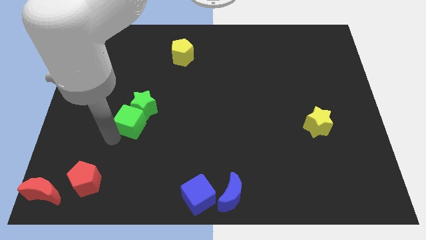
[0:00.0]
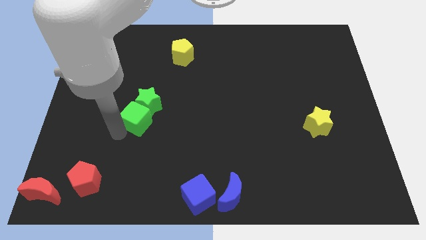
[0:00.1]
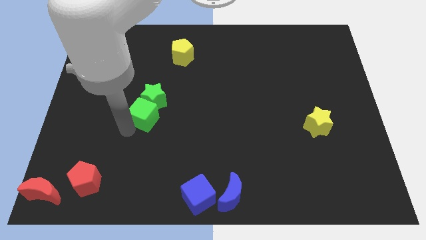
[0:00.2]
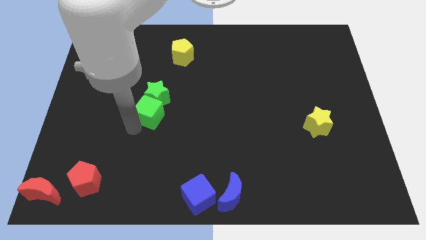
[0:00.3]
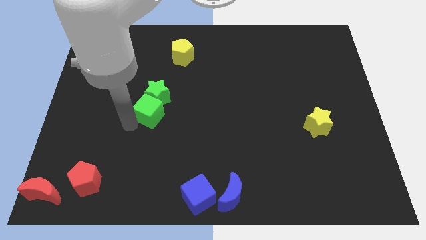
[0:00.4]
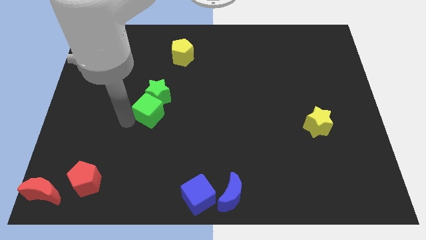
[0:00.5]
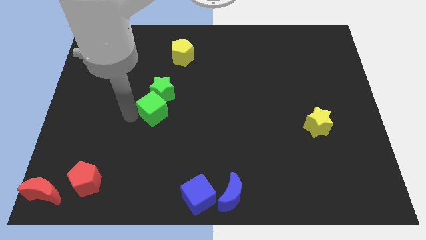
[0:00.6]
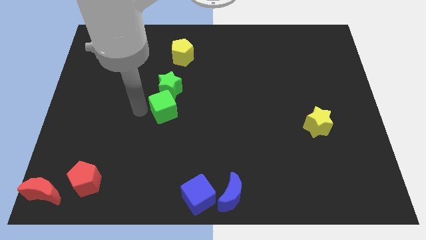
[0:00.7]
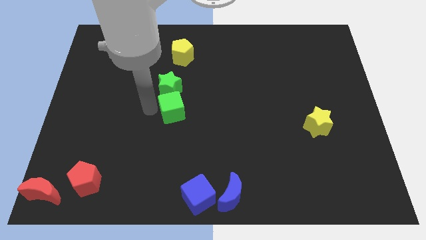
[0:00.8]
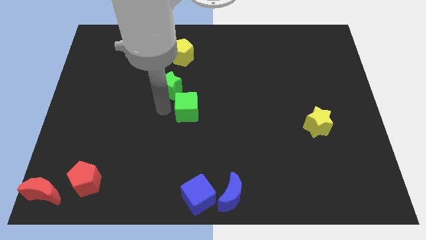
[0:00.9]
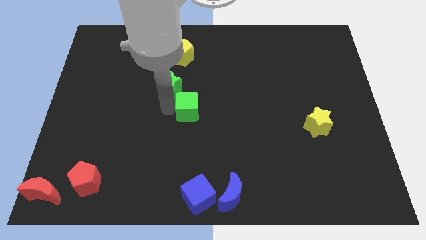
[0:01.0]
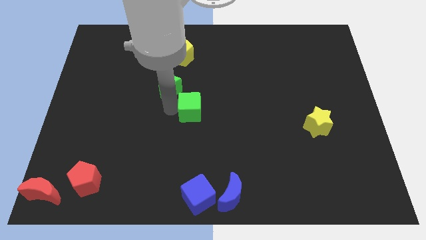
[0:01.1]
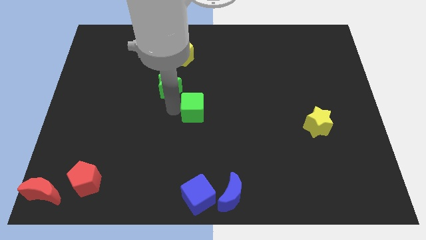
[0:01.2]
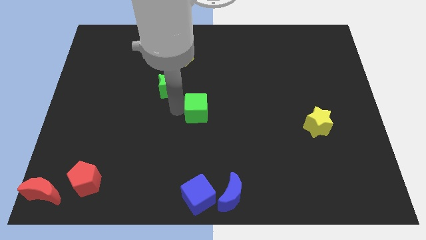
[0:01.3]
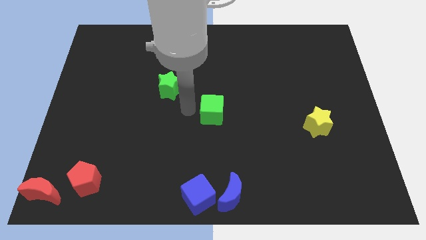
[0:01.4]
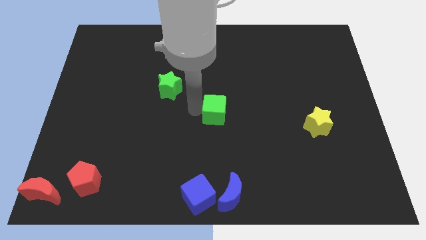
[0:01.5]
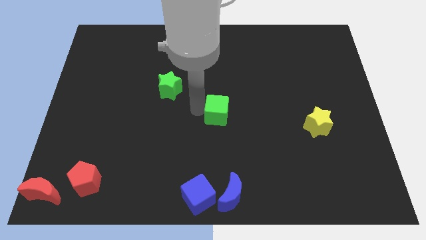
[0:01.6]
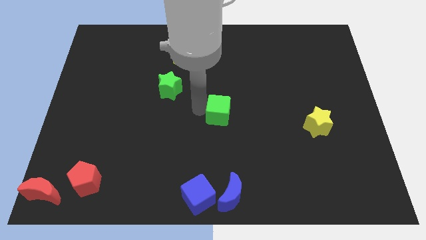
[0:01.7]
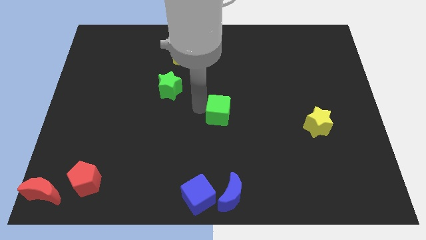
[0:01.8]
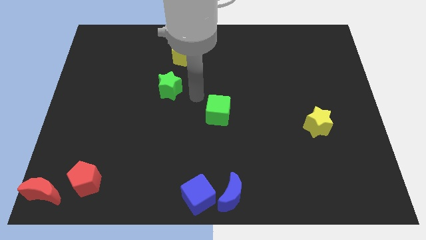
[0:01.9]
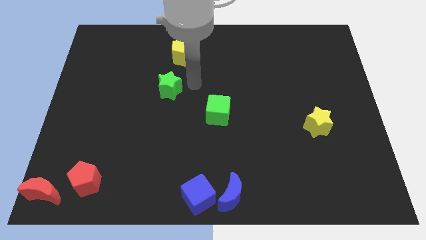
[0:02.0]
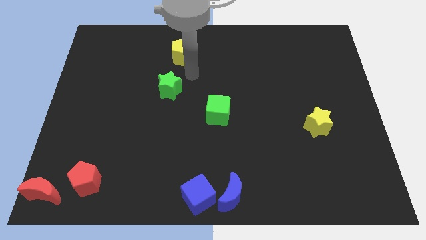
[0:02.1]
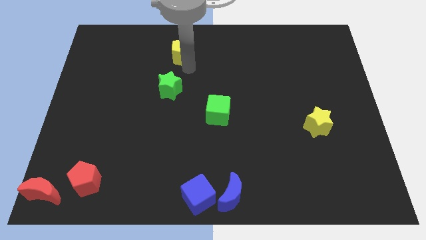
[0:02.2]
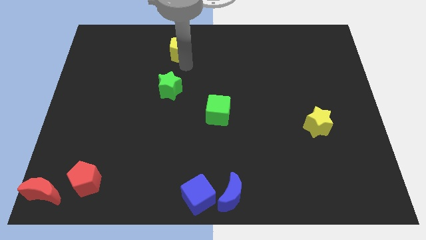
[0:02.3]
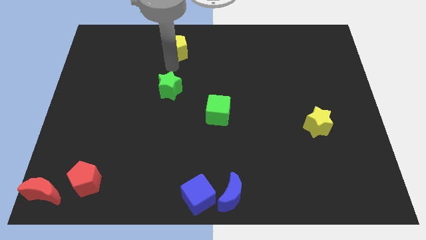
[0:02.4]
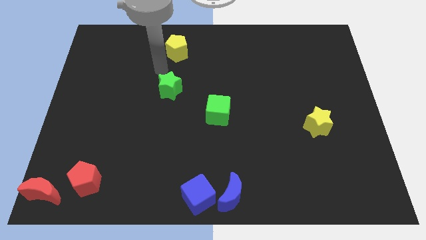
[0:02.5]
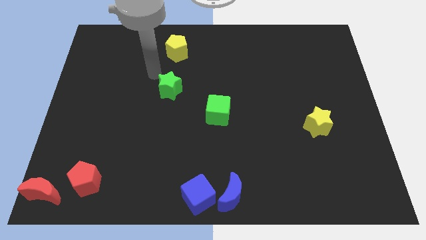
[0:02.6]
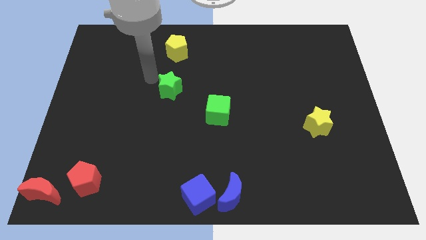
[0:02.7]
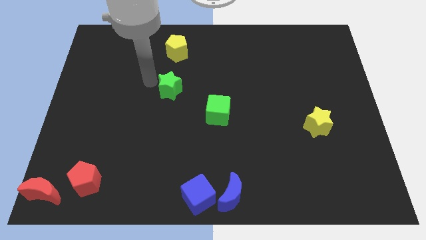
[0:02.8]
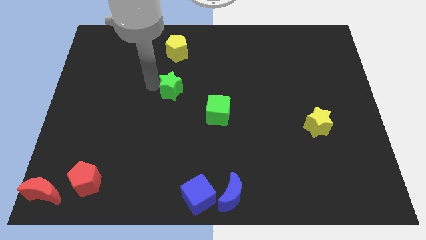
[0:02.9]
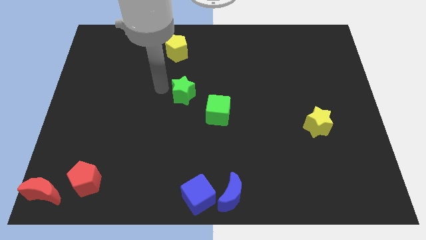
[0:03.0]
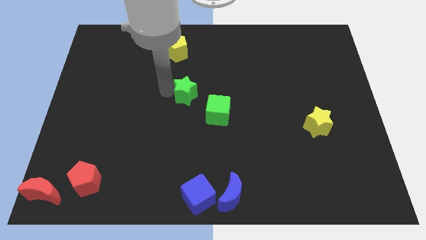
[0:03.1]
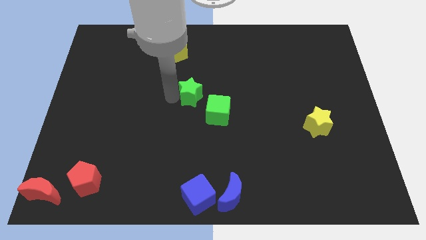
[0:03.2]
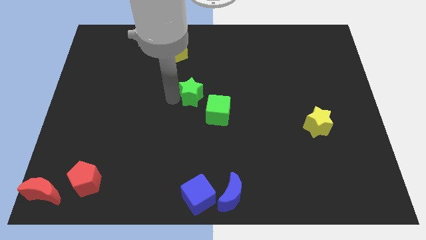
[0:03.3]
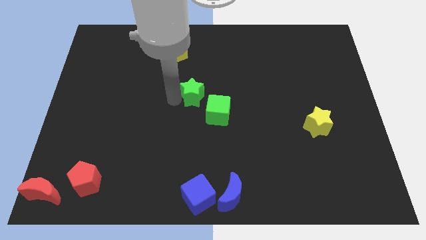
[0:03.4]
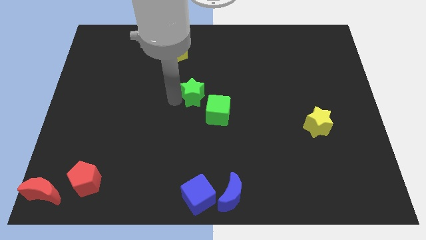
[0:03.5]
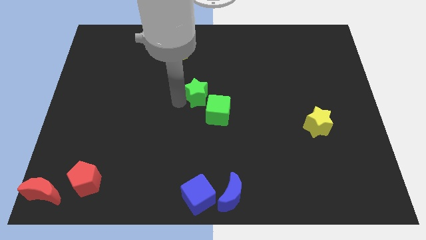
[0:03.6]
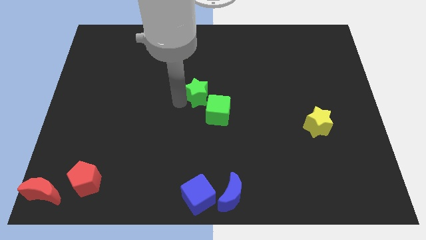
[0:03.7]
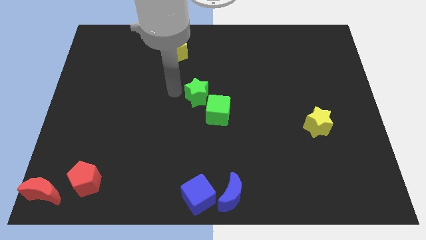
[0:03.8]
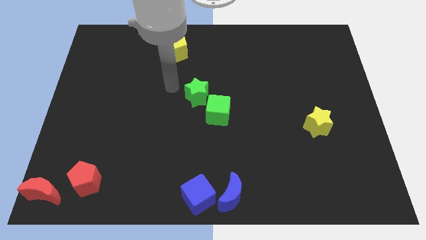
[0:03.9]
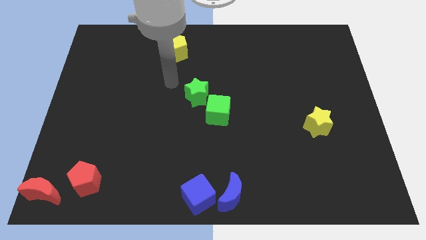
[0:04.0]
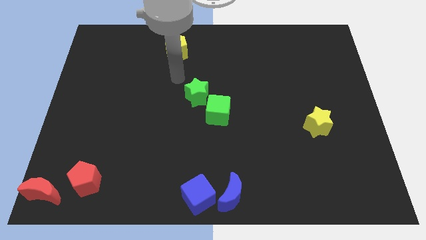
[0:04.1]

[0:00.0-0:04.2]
move green blocks to the center

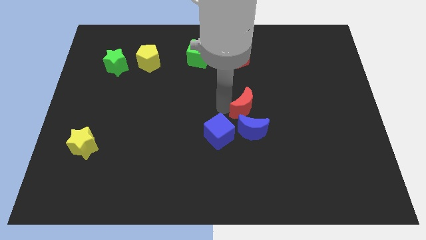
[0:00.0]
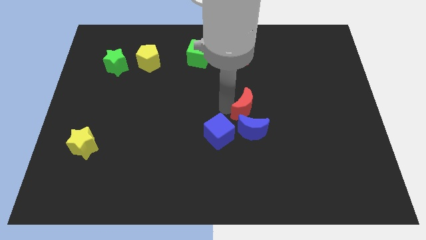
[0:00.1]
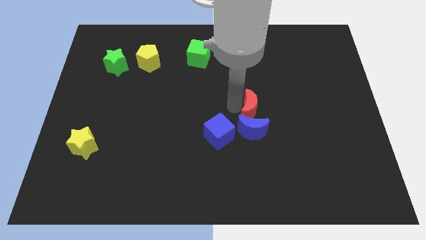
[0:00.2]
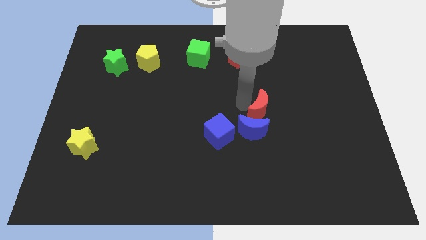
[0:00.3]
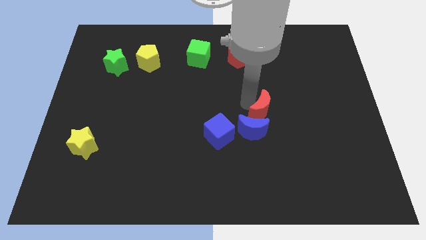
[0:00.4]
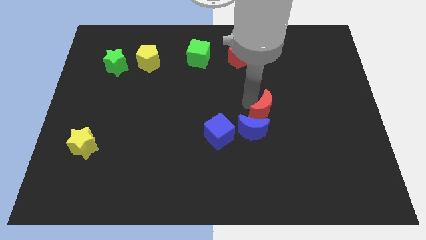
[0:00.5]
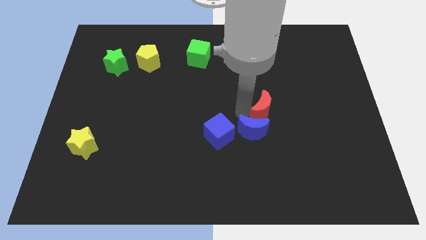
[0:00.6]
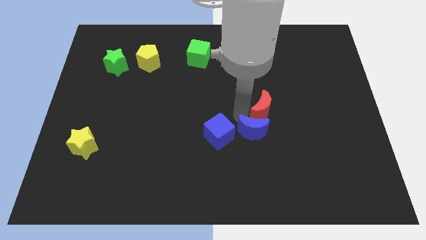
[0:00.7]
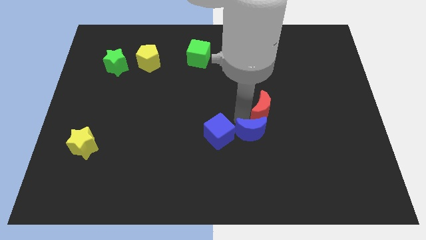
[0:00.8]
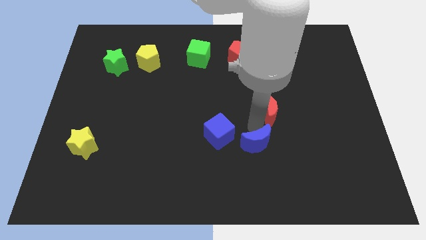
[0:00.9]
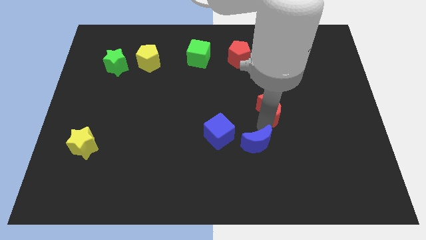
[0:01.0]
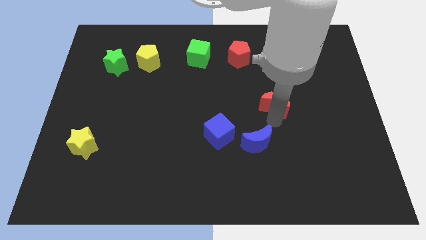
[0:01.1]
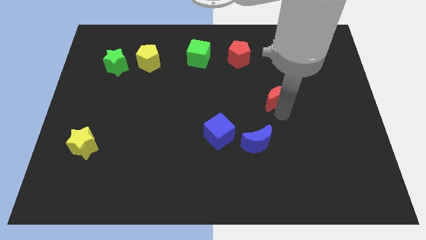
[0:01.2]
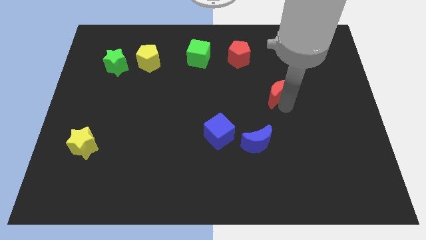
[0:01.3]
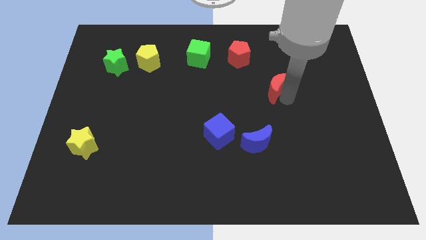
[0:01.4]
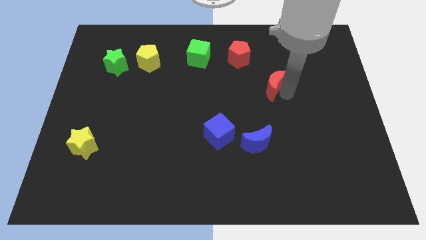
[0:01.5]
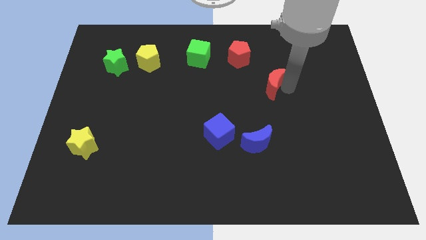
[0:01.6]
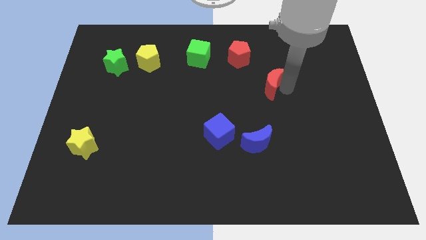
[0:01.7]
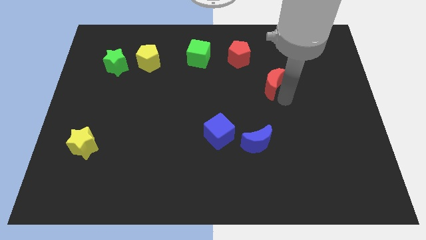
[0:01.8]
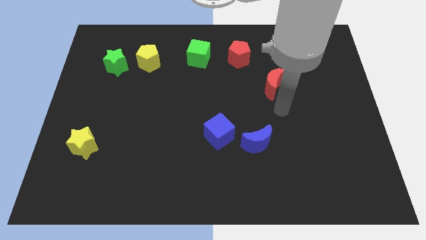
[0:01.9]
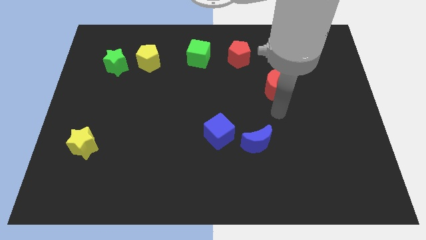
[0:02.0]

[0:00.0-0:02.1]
separate the red moon from the blue moon

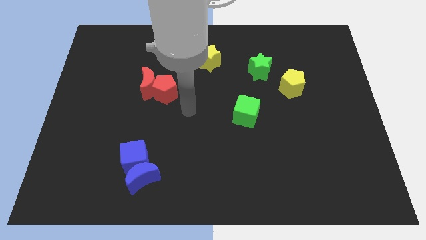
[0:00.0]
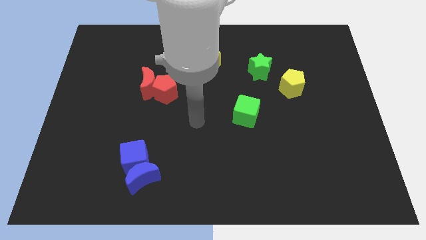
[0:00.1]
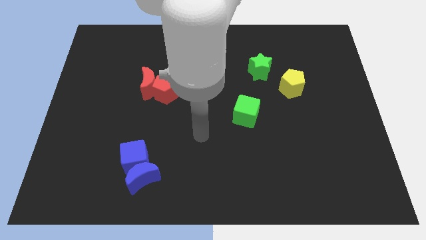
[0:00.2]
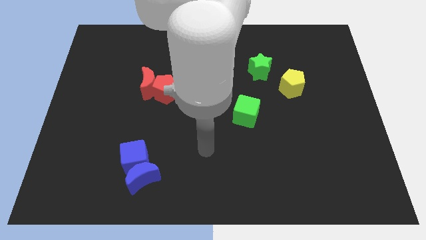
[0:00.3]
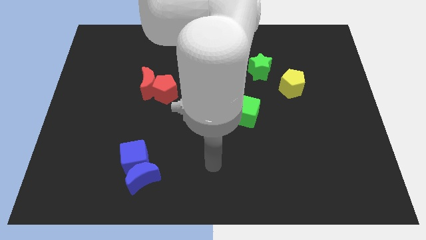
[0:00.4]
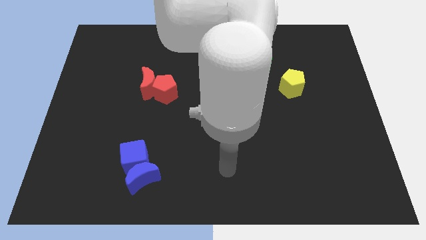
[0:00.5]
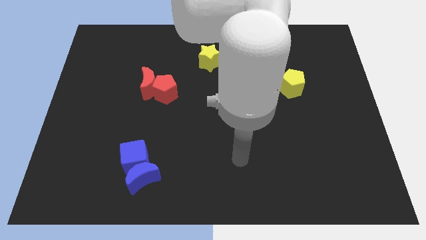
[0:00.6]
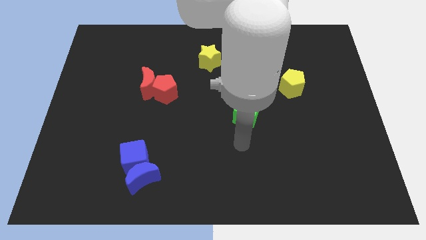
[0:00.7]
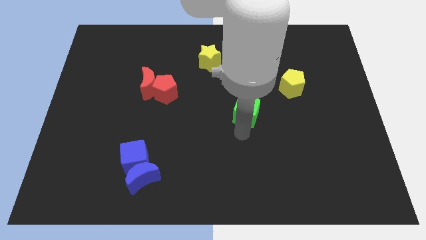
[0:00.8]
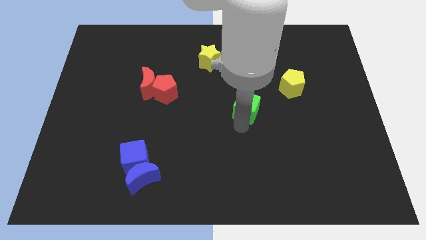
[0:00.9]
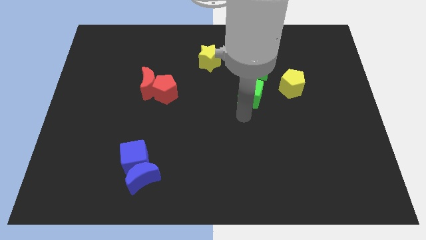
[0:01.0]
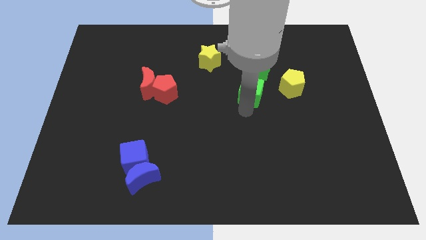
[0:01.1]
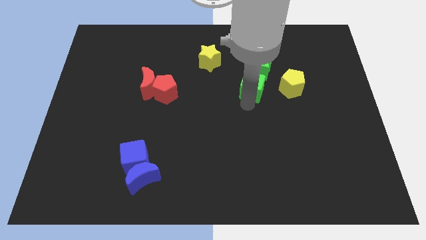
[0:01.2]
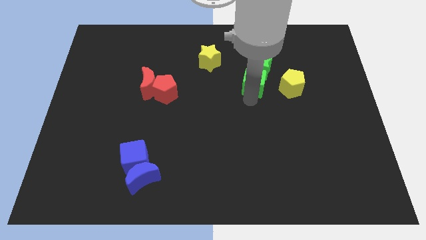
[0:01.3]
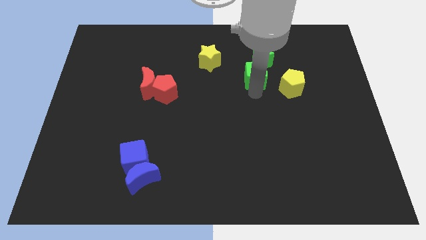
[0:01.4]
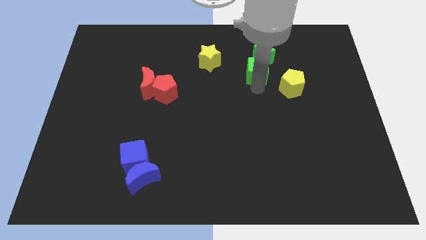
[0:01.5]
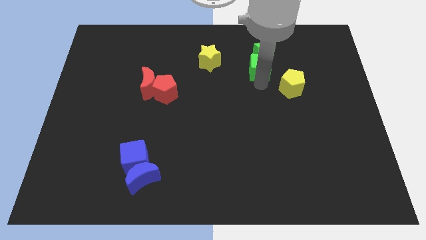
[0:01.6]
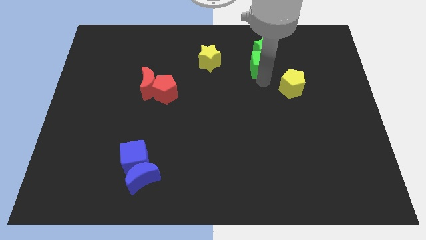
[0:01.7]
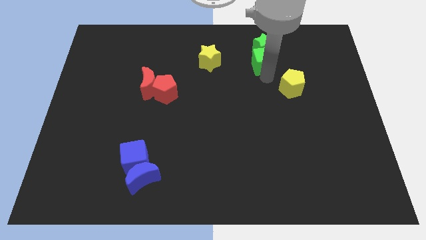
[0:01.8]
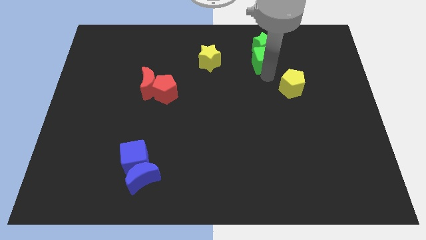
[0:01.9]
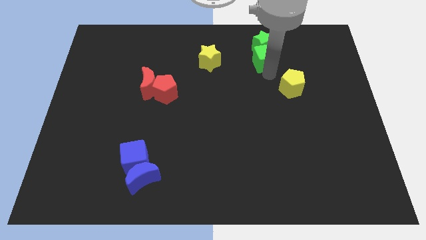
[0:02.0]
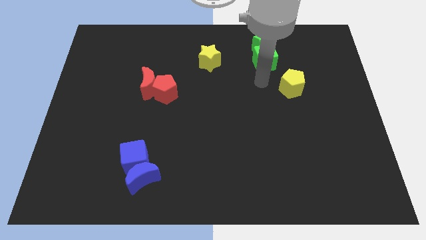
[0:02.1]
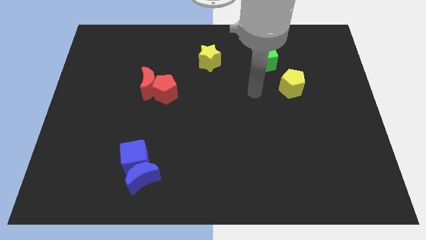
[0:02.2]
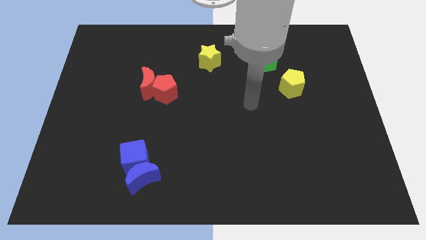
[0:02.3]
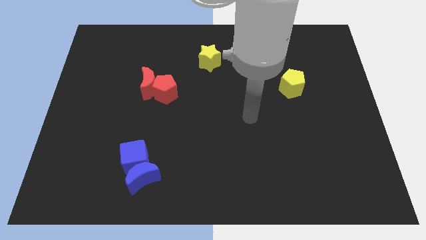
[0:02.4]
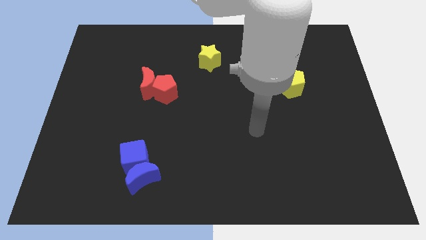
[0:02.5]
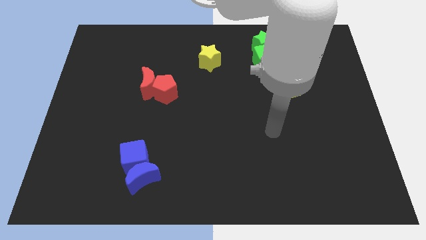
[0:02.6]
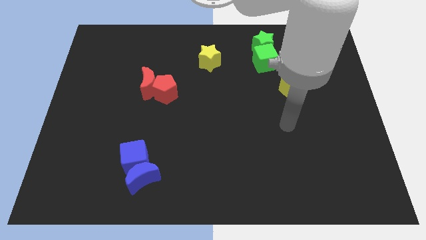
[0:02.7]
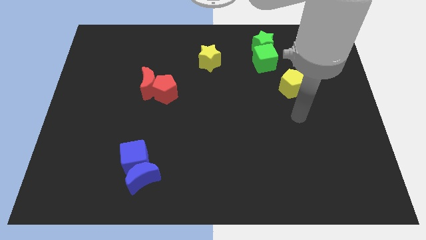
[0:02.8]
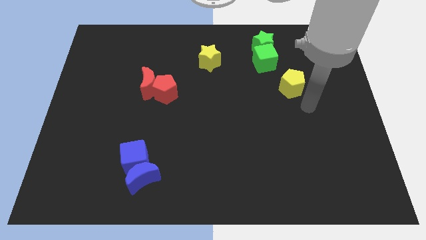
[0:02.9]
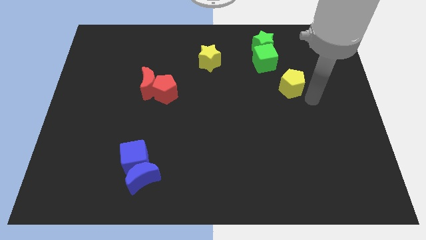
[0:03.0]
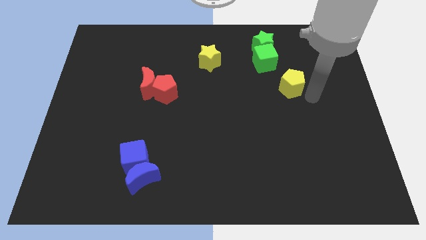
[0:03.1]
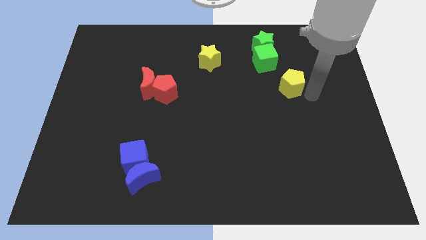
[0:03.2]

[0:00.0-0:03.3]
push the green blocks to the top of the board
